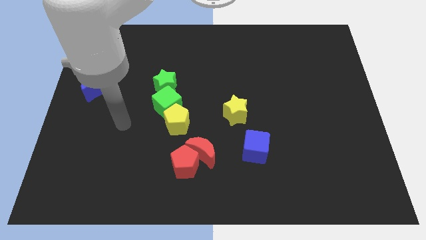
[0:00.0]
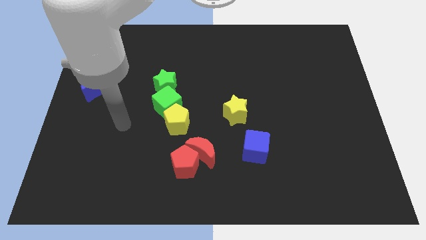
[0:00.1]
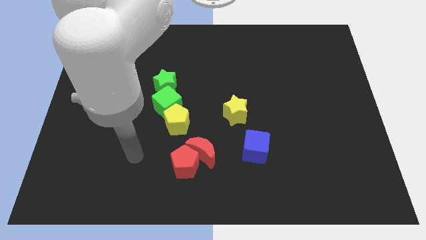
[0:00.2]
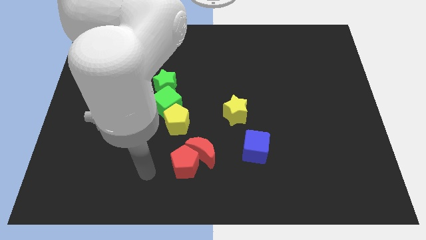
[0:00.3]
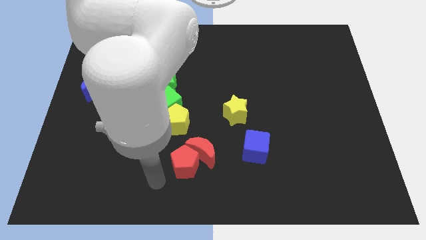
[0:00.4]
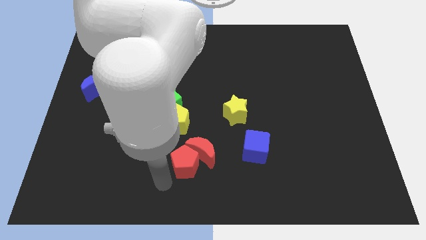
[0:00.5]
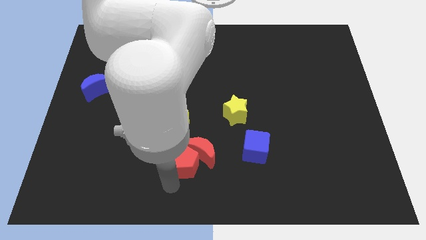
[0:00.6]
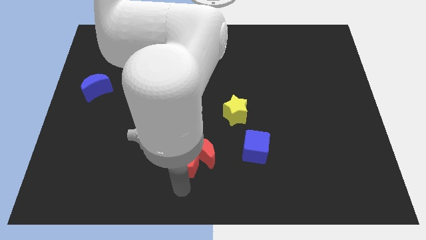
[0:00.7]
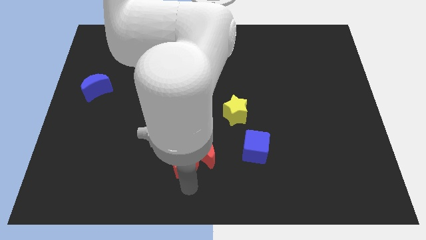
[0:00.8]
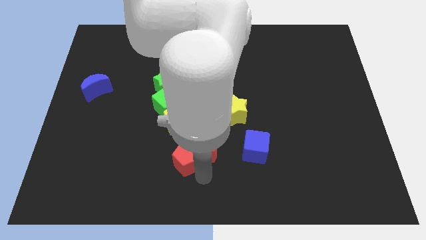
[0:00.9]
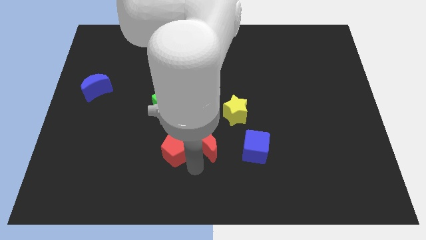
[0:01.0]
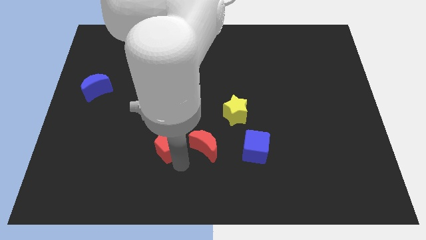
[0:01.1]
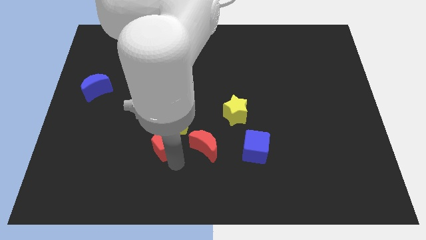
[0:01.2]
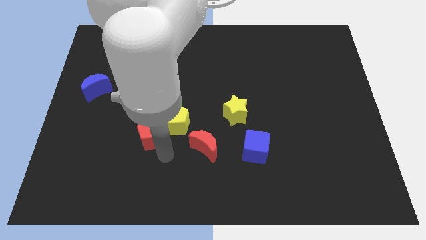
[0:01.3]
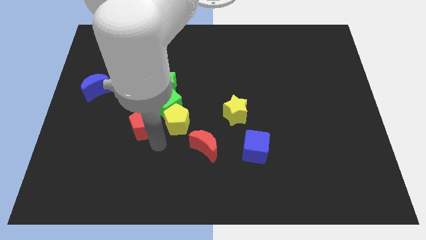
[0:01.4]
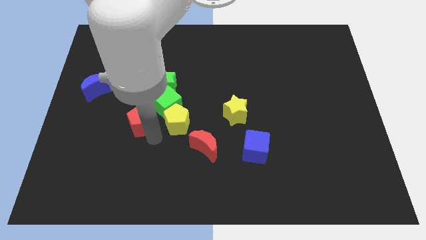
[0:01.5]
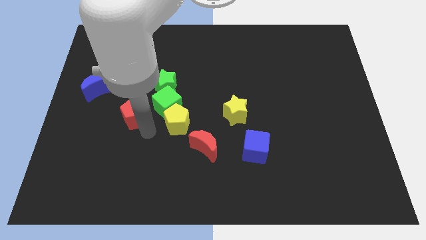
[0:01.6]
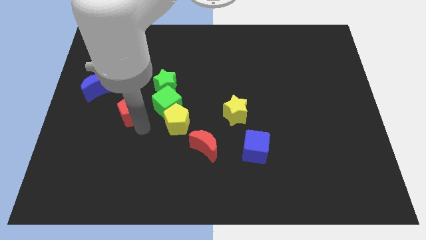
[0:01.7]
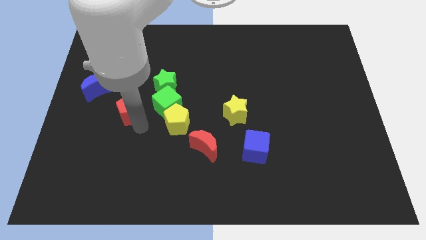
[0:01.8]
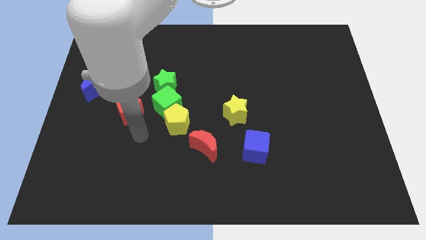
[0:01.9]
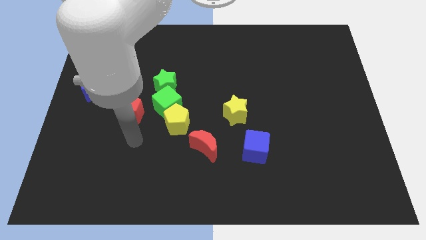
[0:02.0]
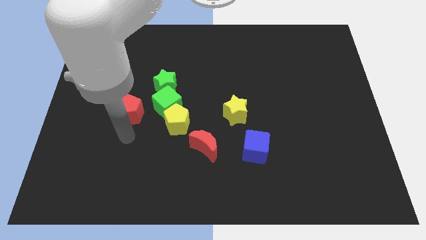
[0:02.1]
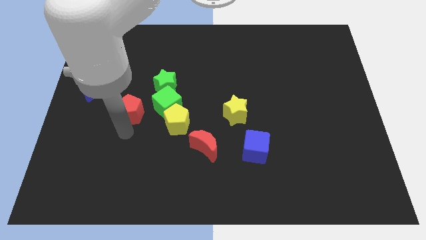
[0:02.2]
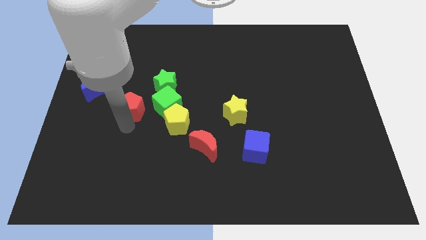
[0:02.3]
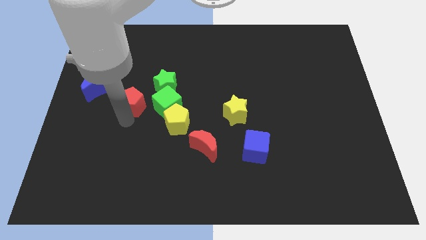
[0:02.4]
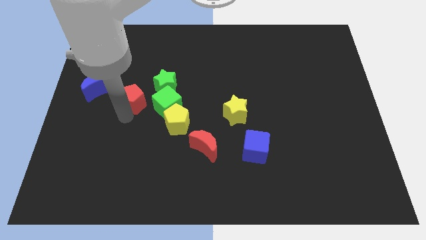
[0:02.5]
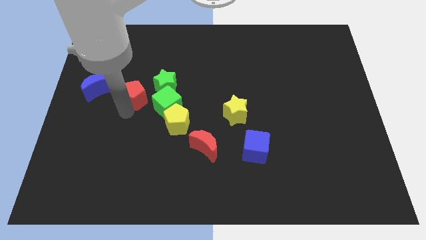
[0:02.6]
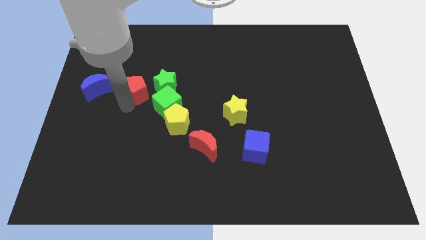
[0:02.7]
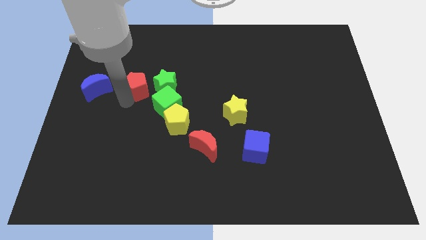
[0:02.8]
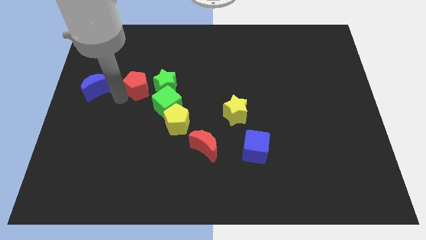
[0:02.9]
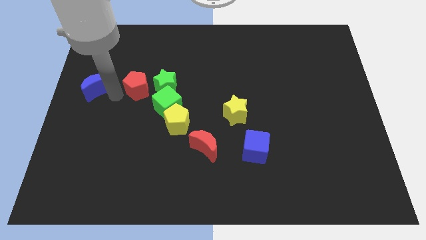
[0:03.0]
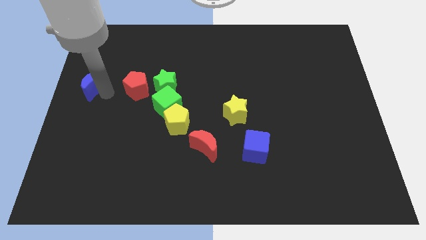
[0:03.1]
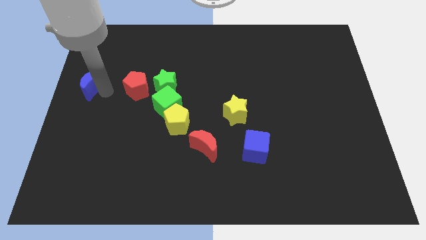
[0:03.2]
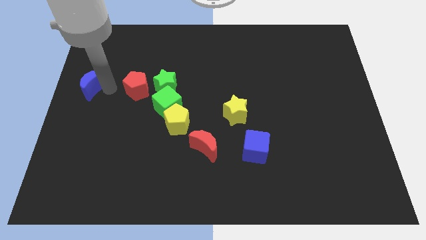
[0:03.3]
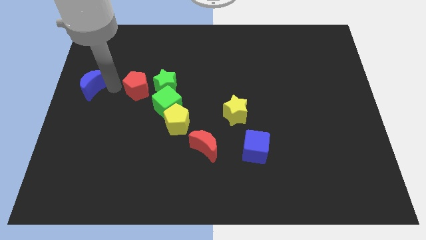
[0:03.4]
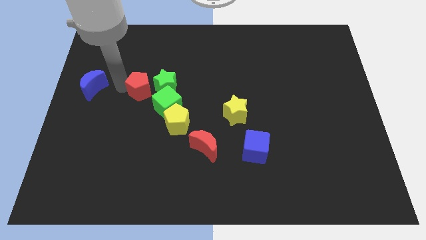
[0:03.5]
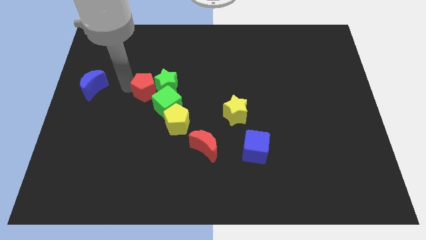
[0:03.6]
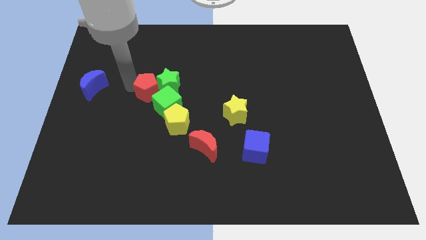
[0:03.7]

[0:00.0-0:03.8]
move the red pentagon next to the green star

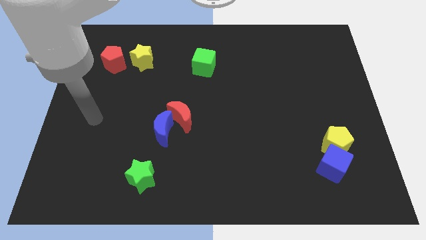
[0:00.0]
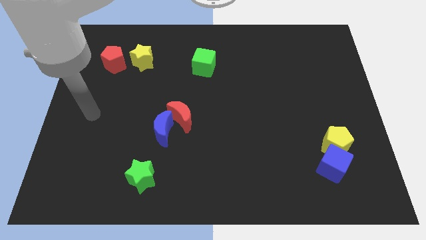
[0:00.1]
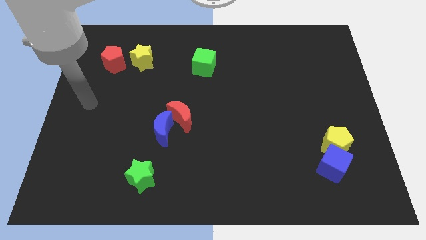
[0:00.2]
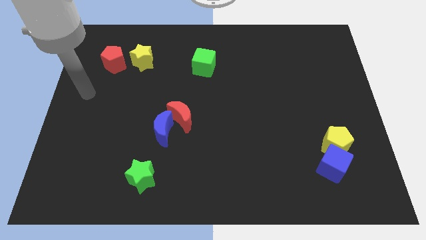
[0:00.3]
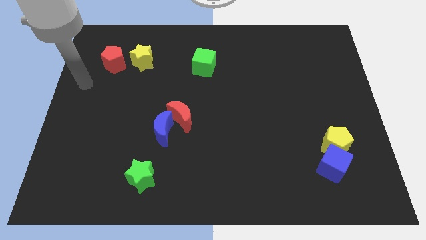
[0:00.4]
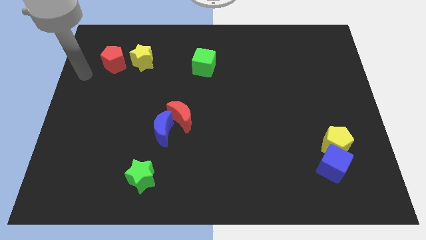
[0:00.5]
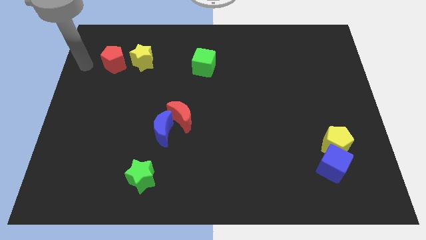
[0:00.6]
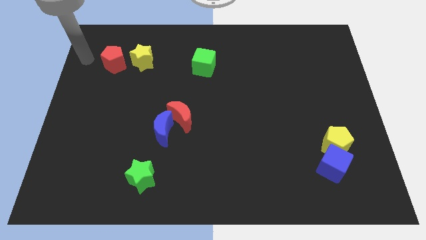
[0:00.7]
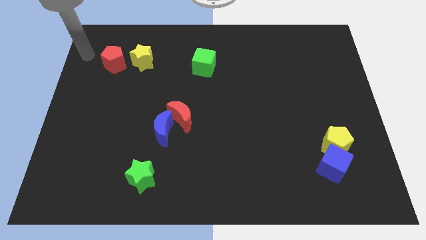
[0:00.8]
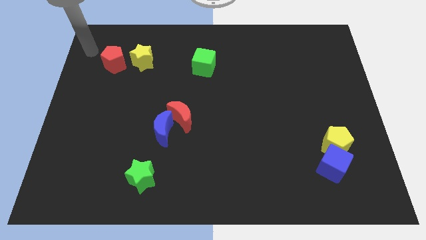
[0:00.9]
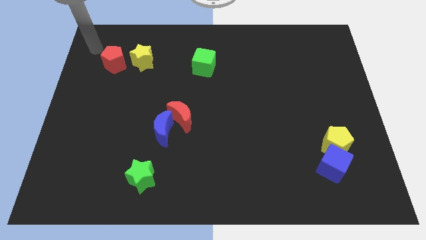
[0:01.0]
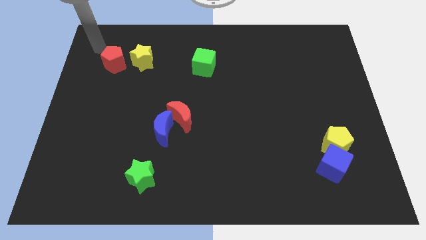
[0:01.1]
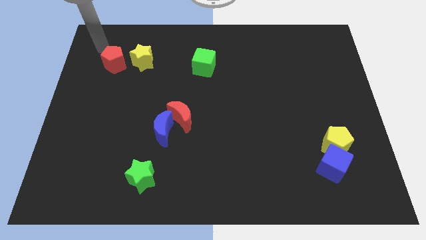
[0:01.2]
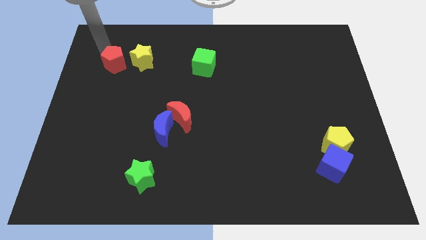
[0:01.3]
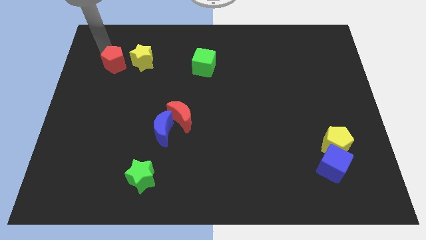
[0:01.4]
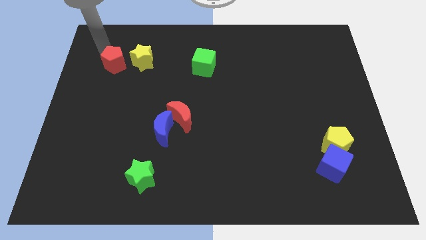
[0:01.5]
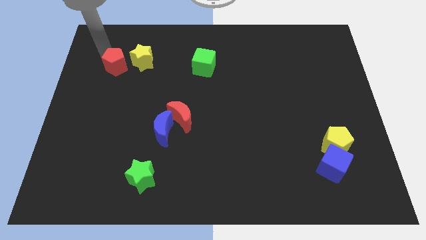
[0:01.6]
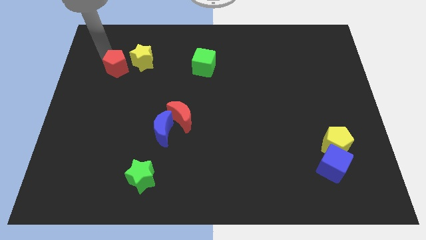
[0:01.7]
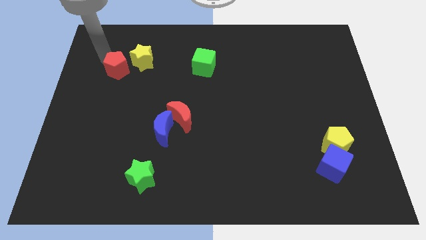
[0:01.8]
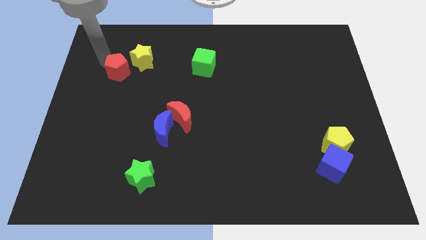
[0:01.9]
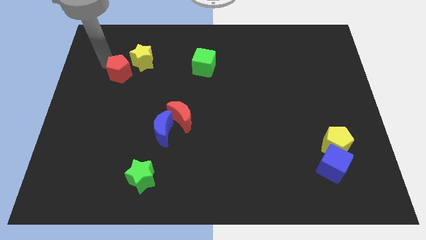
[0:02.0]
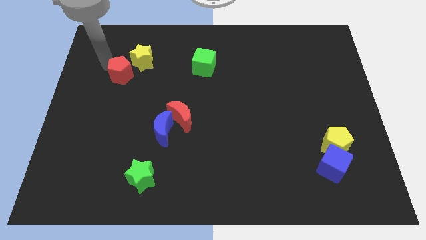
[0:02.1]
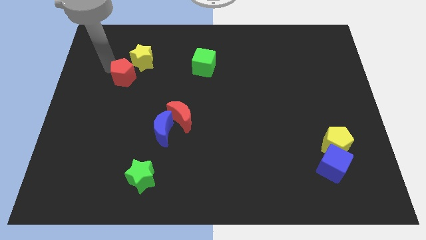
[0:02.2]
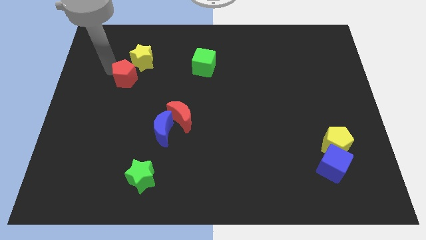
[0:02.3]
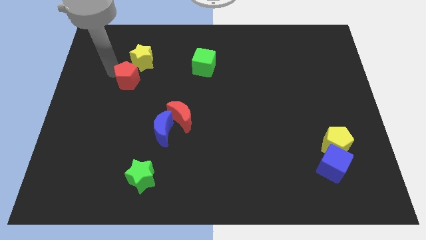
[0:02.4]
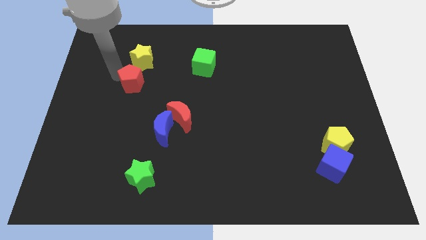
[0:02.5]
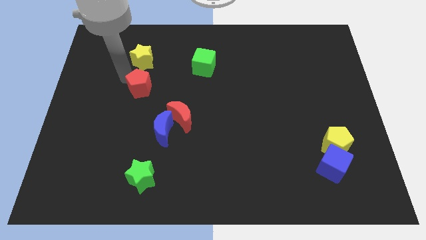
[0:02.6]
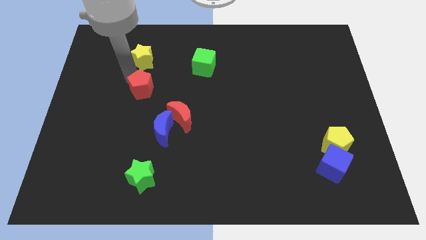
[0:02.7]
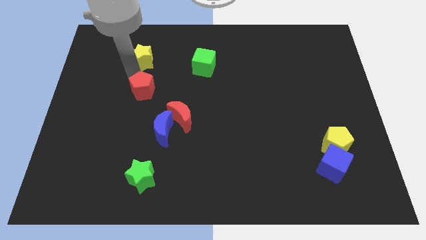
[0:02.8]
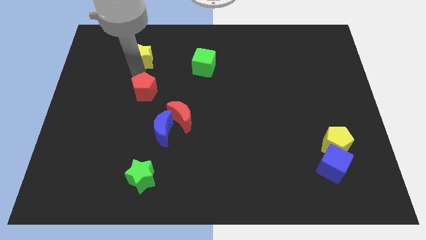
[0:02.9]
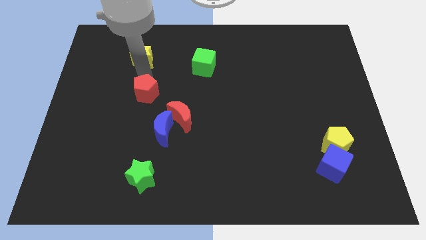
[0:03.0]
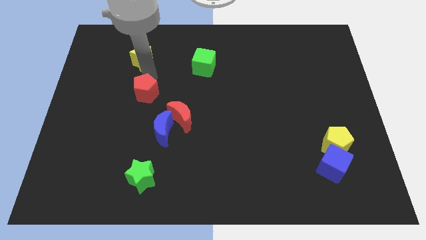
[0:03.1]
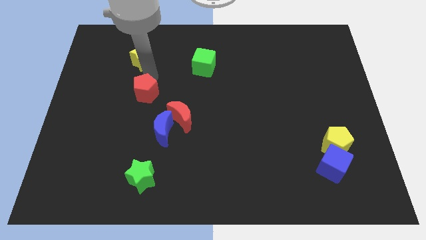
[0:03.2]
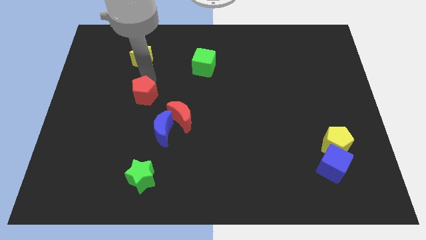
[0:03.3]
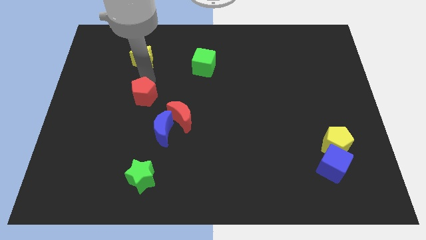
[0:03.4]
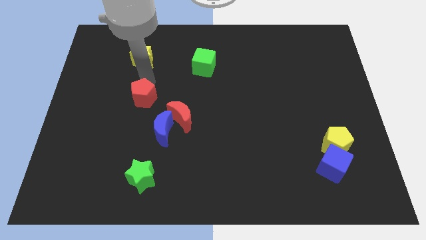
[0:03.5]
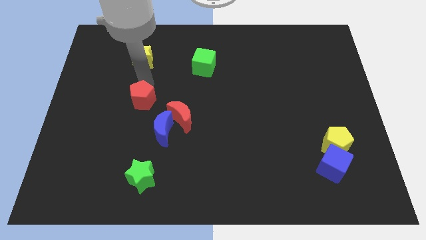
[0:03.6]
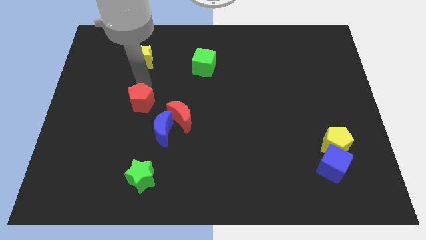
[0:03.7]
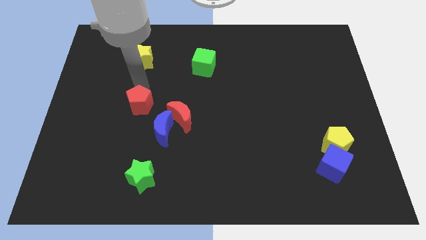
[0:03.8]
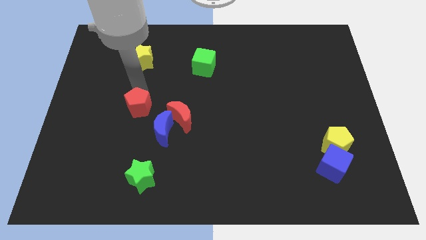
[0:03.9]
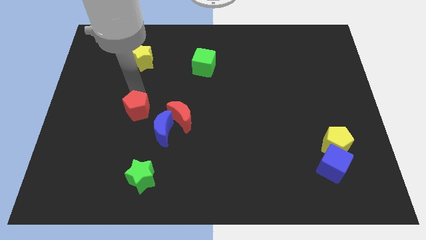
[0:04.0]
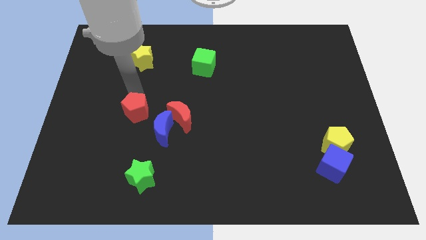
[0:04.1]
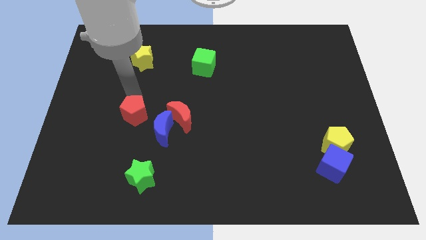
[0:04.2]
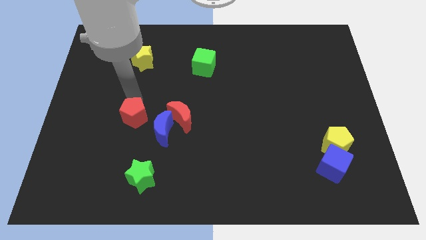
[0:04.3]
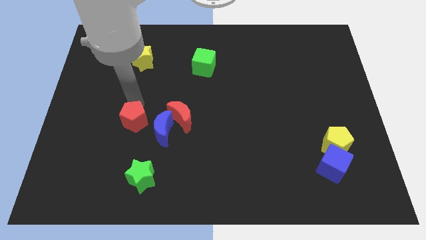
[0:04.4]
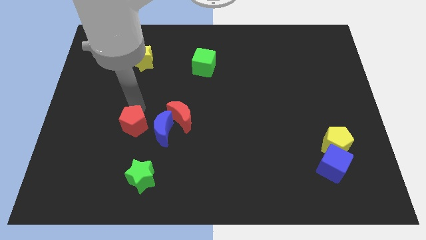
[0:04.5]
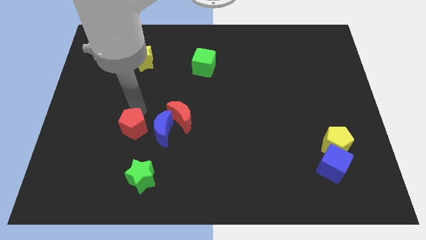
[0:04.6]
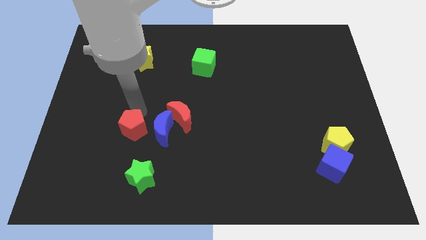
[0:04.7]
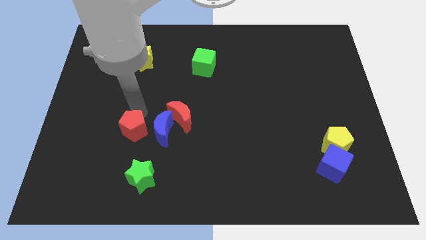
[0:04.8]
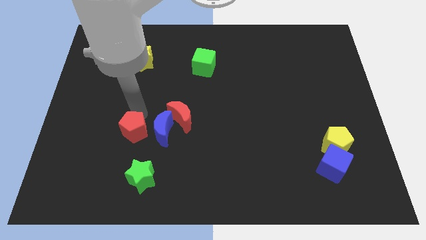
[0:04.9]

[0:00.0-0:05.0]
put the red pentagon next to the blue moon
